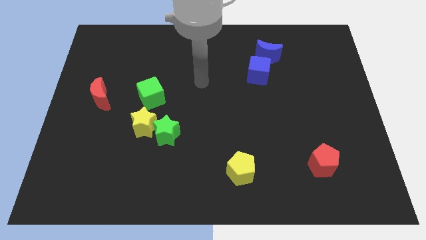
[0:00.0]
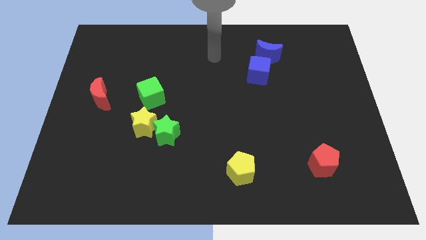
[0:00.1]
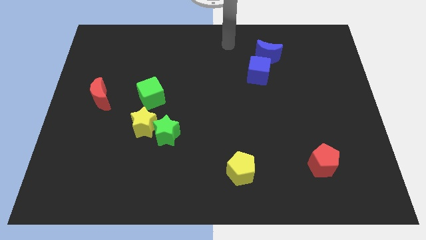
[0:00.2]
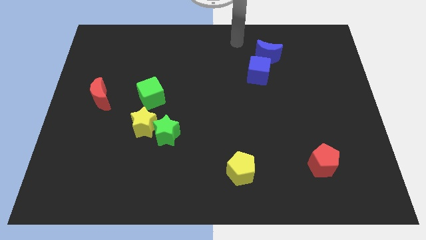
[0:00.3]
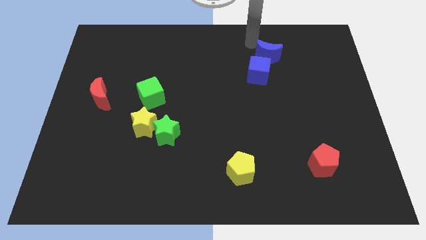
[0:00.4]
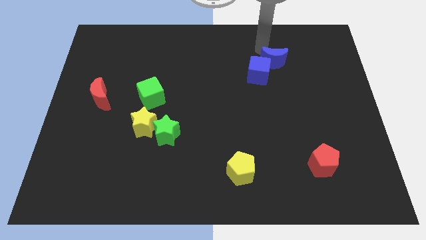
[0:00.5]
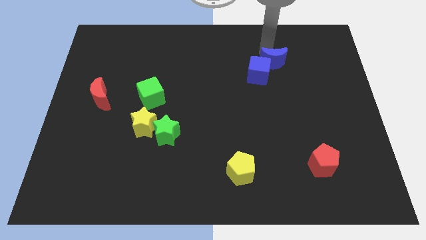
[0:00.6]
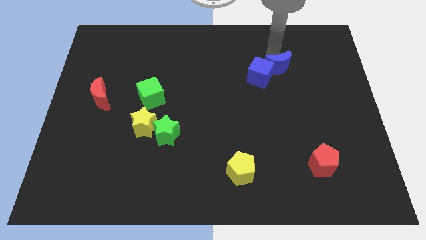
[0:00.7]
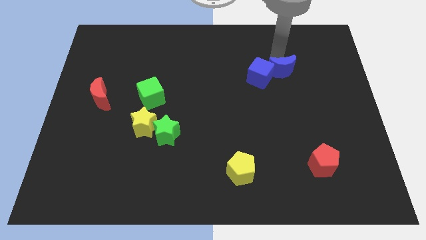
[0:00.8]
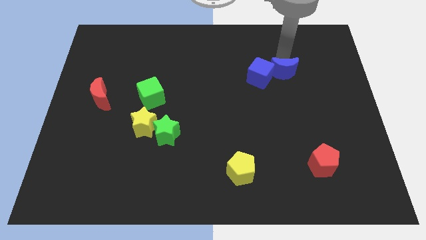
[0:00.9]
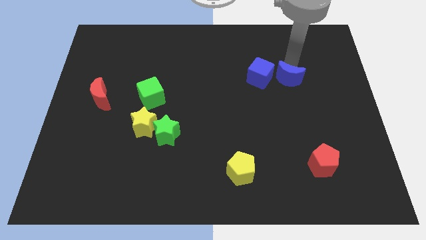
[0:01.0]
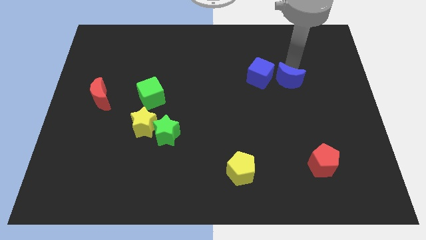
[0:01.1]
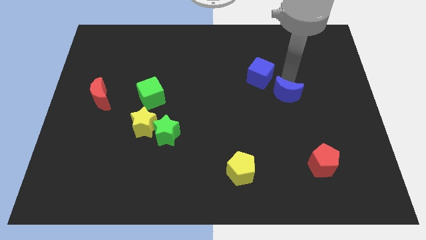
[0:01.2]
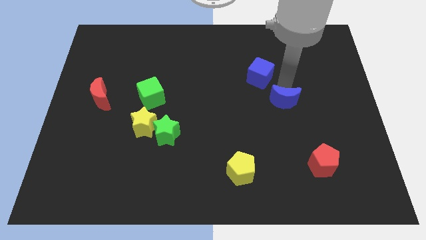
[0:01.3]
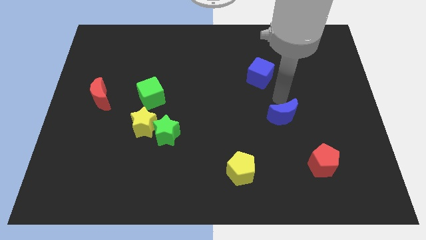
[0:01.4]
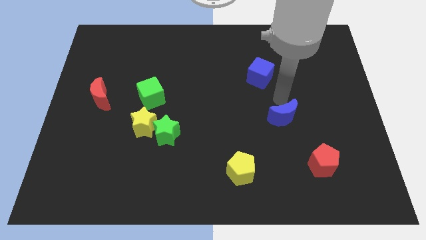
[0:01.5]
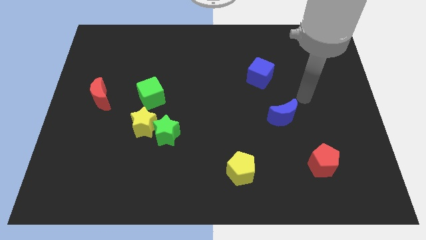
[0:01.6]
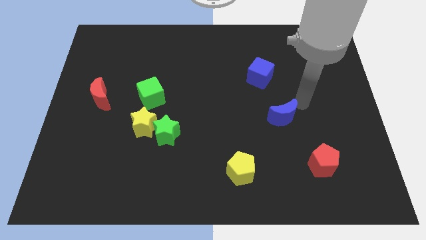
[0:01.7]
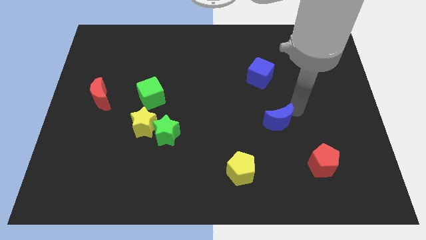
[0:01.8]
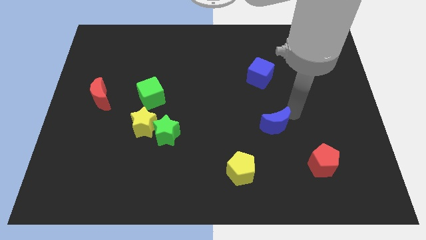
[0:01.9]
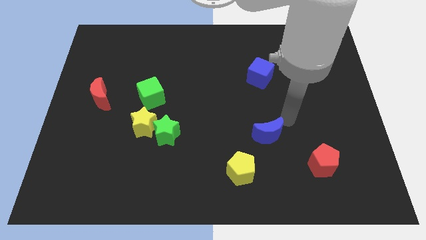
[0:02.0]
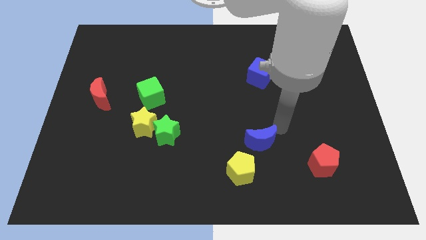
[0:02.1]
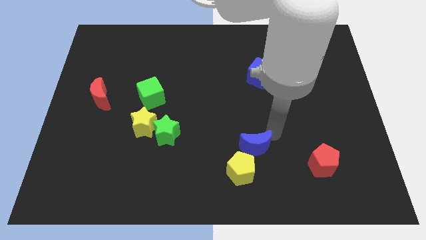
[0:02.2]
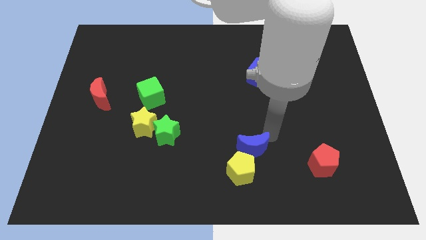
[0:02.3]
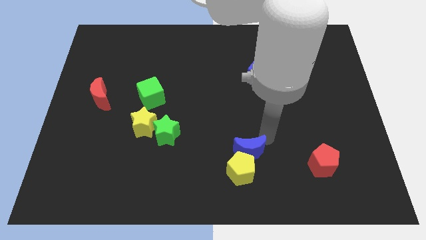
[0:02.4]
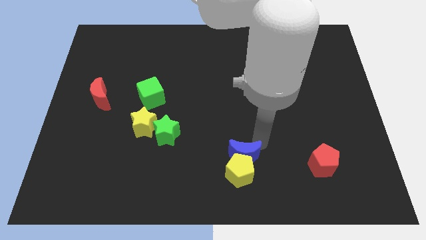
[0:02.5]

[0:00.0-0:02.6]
put the blue moon to the yellow pentagon

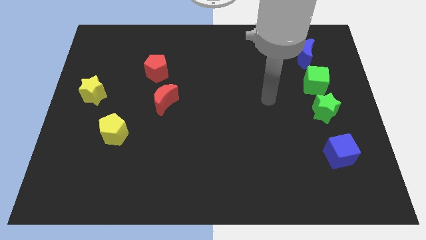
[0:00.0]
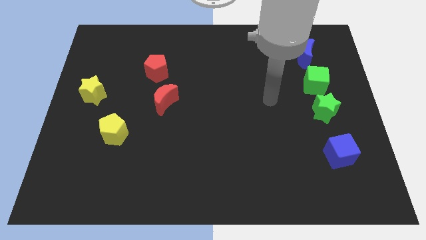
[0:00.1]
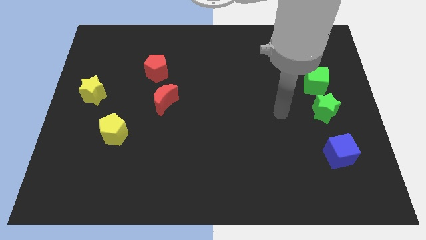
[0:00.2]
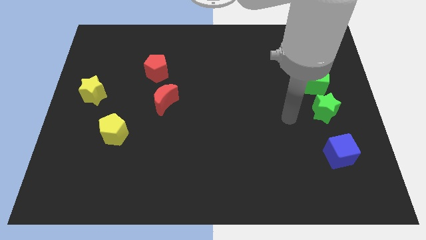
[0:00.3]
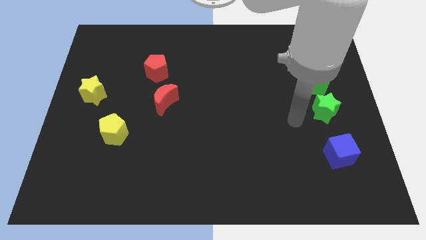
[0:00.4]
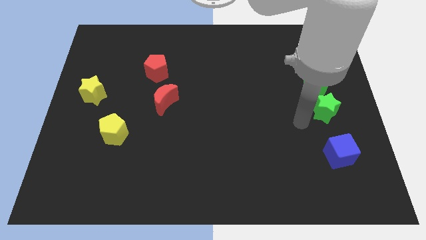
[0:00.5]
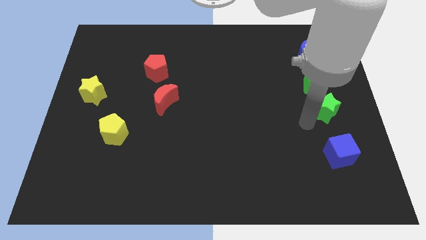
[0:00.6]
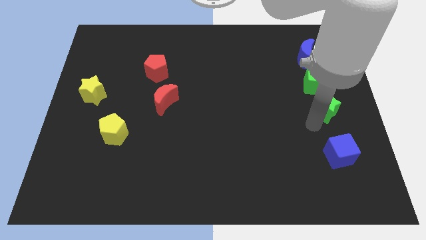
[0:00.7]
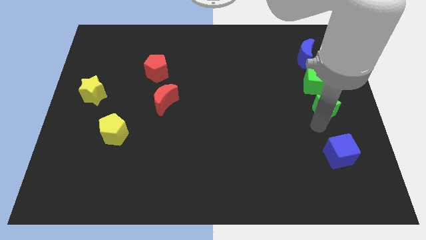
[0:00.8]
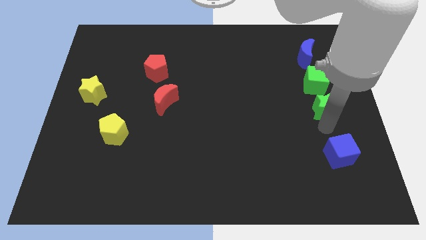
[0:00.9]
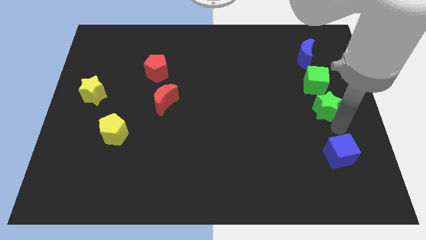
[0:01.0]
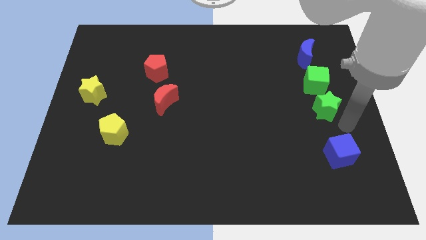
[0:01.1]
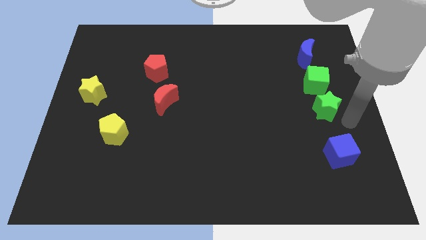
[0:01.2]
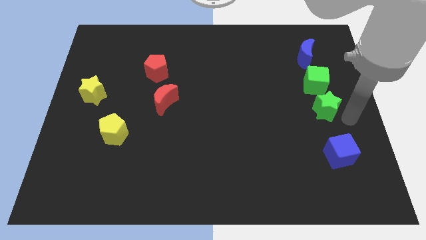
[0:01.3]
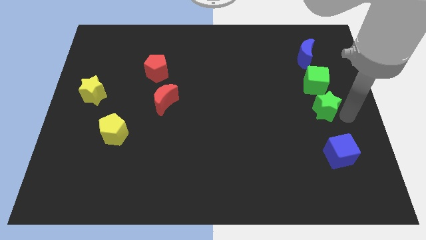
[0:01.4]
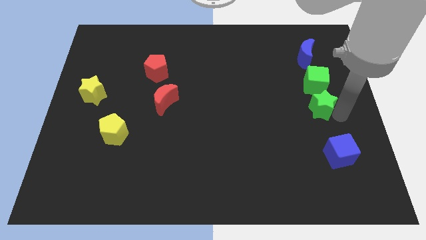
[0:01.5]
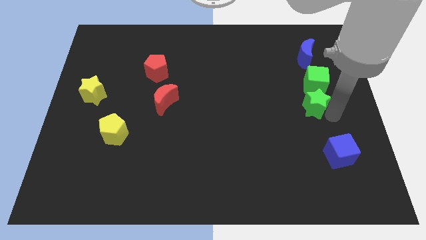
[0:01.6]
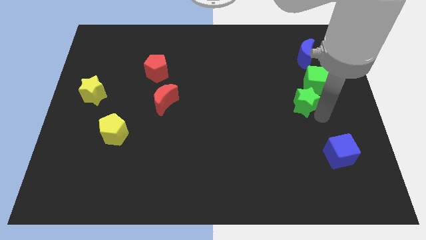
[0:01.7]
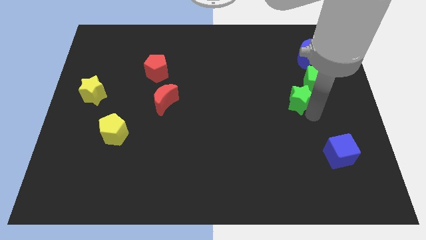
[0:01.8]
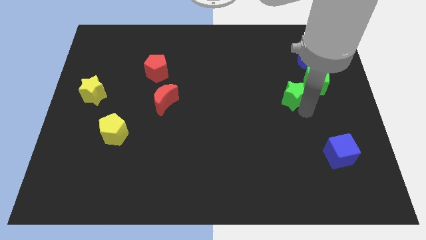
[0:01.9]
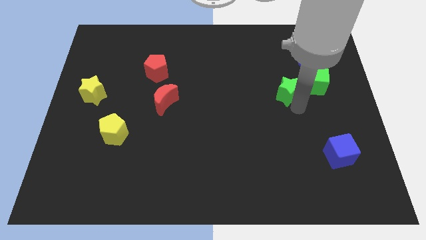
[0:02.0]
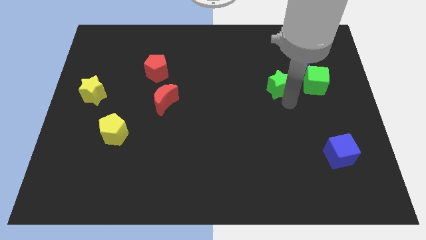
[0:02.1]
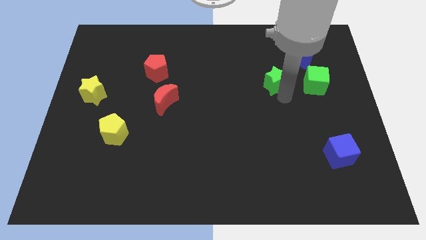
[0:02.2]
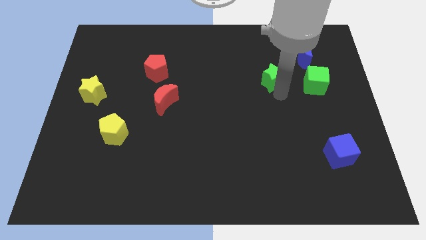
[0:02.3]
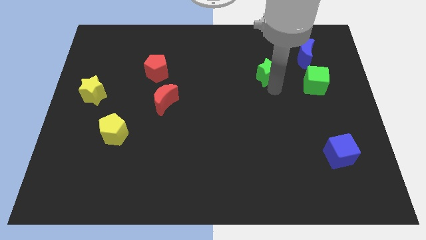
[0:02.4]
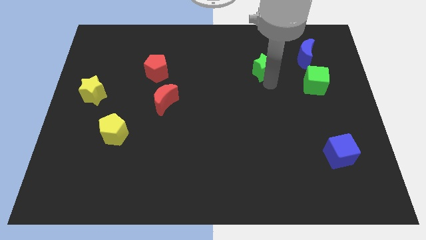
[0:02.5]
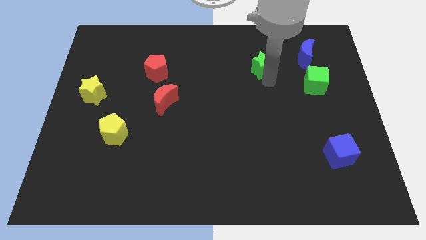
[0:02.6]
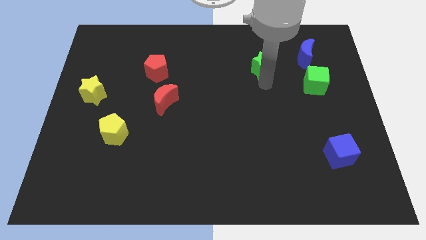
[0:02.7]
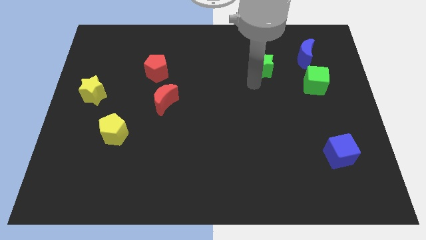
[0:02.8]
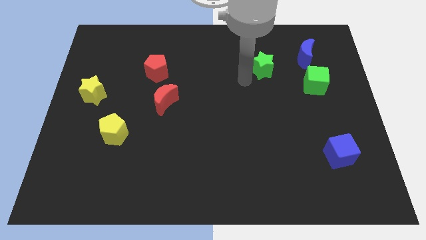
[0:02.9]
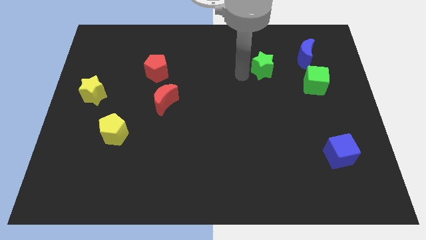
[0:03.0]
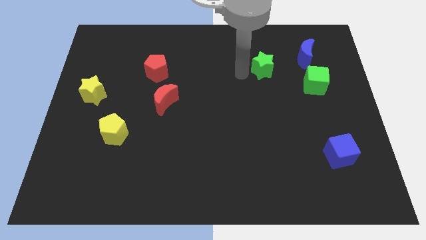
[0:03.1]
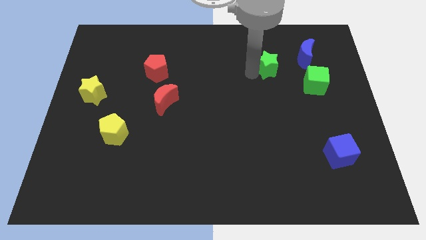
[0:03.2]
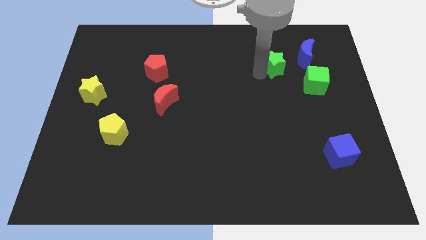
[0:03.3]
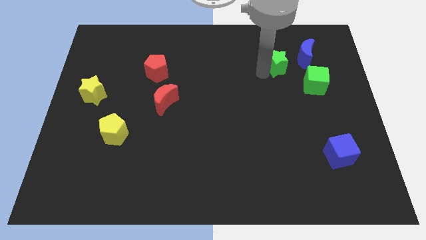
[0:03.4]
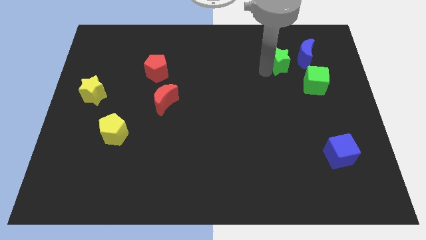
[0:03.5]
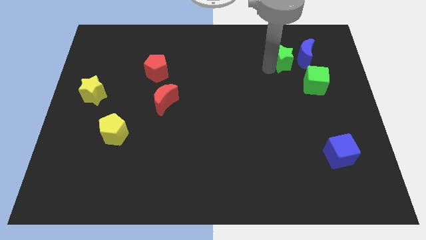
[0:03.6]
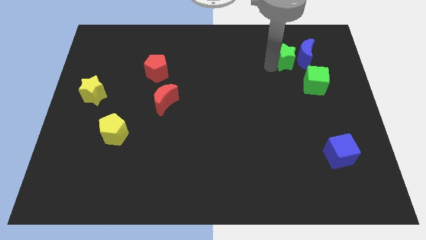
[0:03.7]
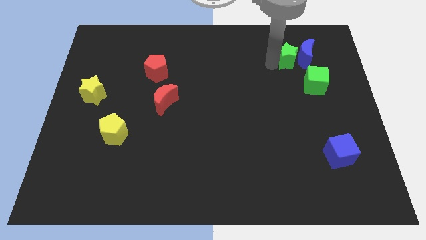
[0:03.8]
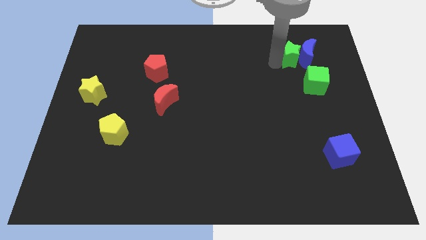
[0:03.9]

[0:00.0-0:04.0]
slide the green star towards the blue moon

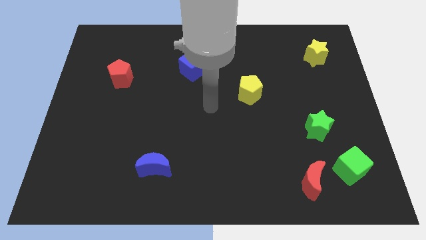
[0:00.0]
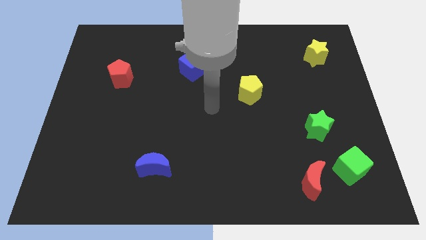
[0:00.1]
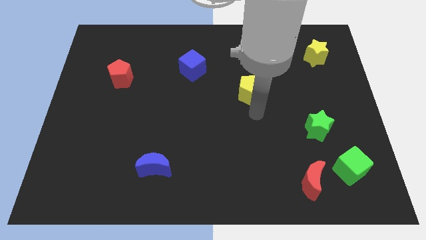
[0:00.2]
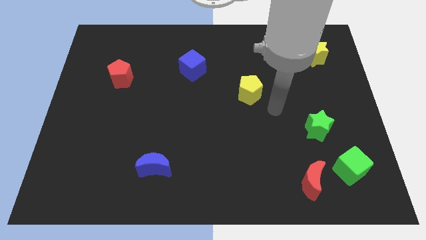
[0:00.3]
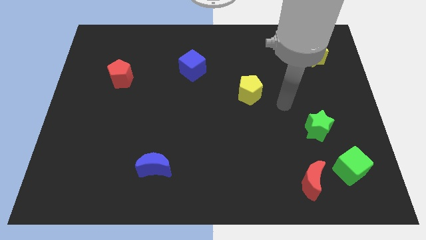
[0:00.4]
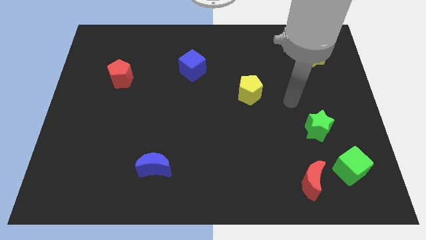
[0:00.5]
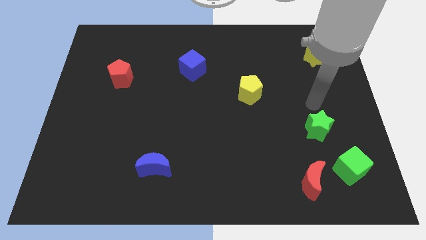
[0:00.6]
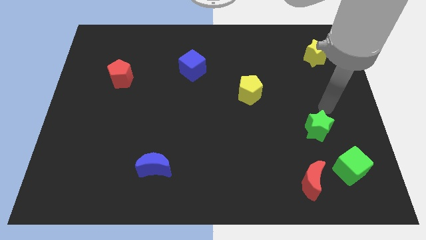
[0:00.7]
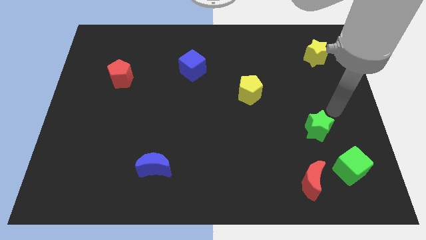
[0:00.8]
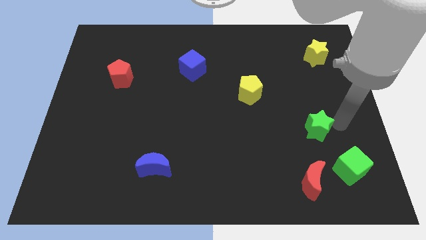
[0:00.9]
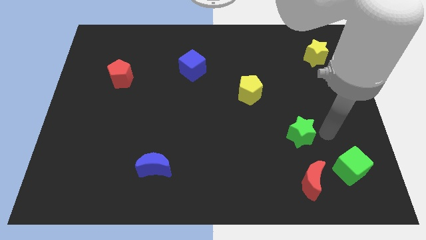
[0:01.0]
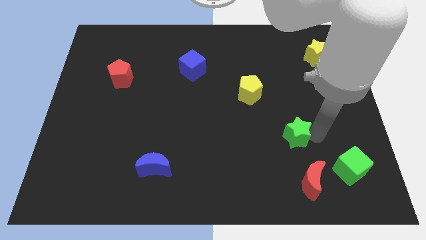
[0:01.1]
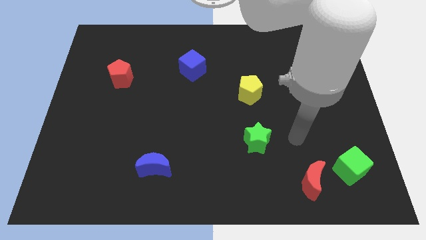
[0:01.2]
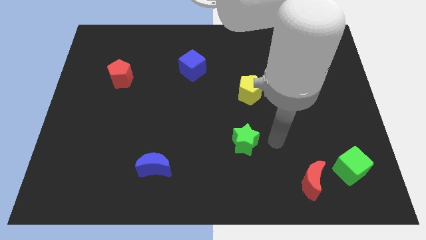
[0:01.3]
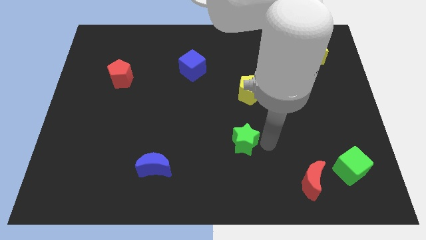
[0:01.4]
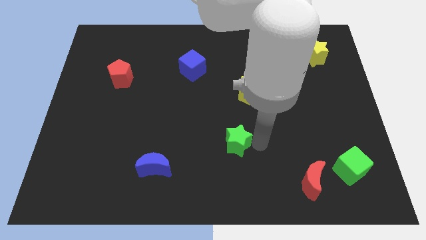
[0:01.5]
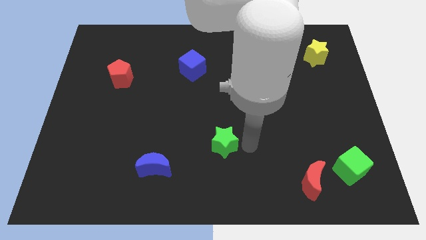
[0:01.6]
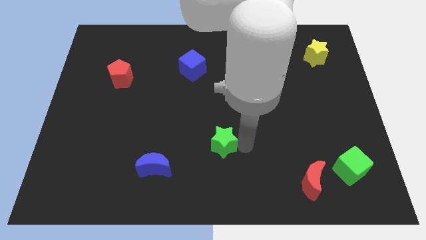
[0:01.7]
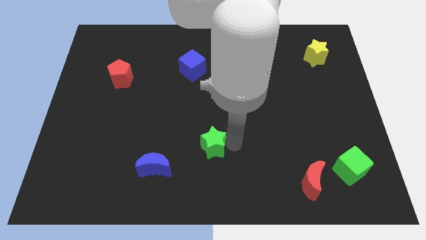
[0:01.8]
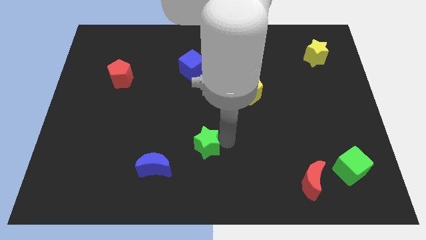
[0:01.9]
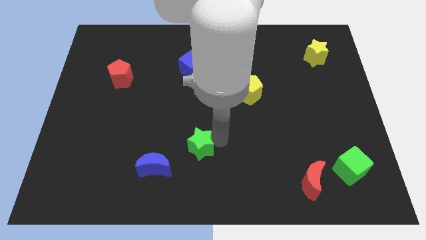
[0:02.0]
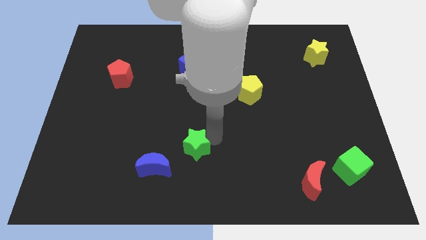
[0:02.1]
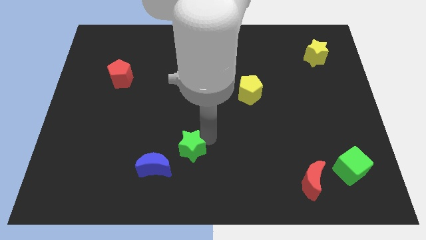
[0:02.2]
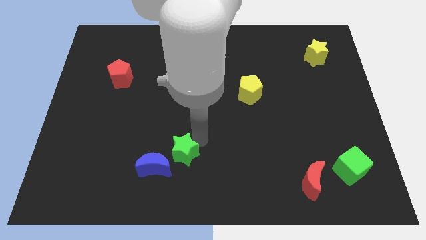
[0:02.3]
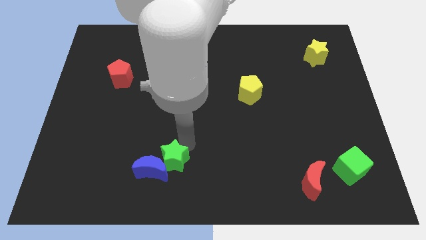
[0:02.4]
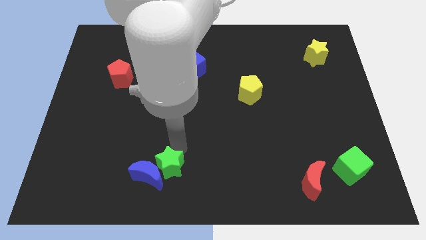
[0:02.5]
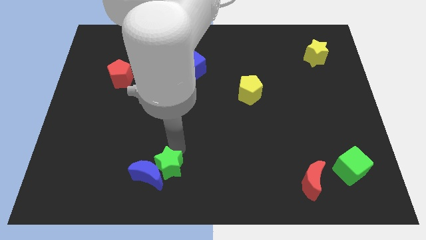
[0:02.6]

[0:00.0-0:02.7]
move the green star to the blue moon
